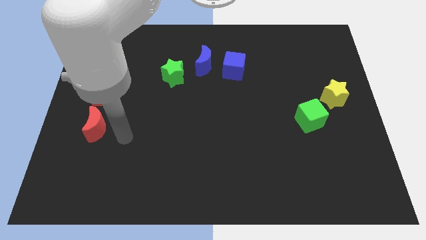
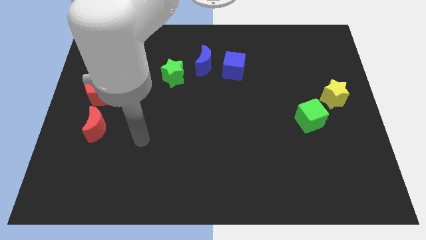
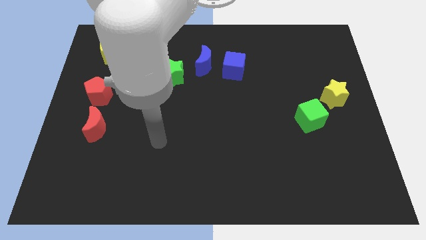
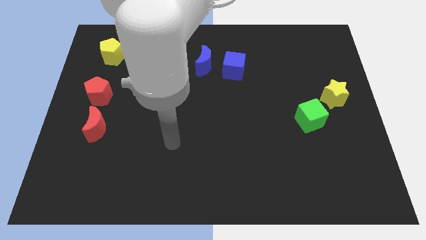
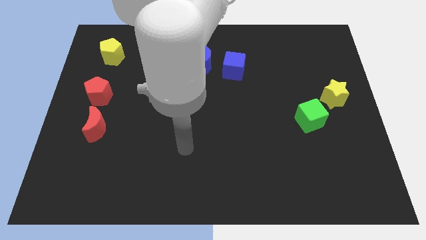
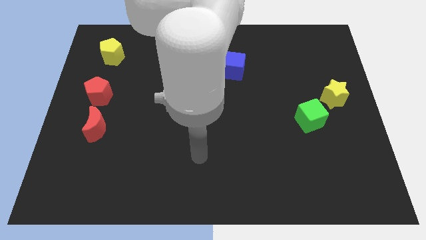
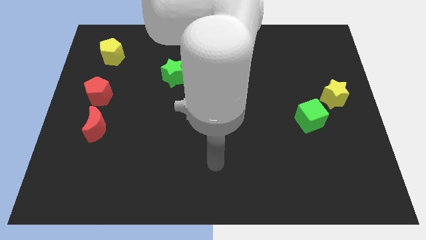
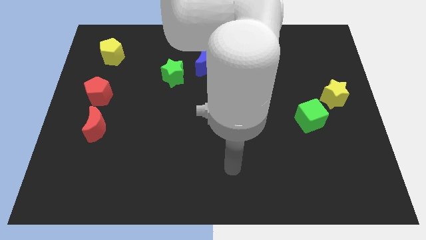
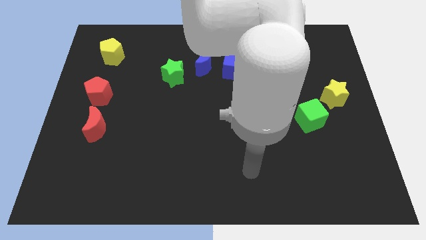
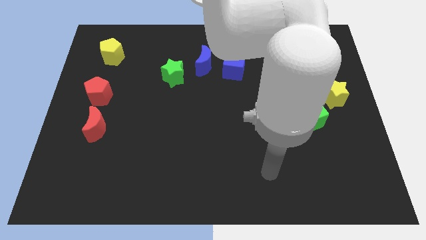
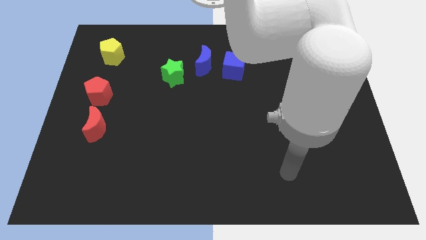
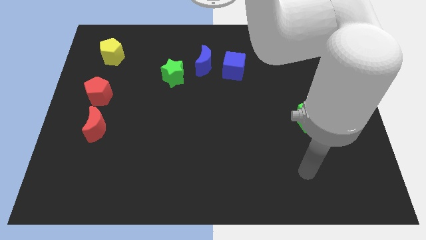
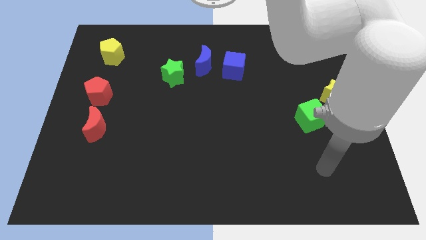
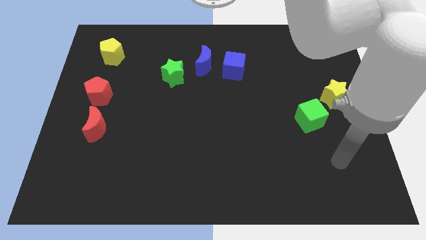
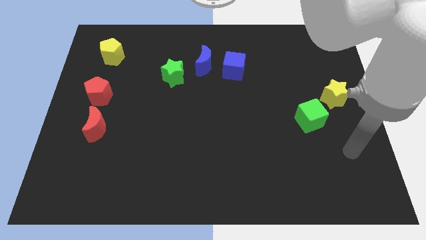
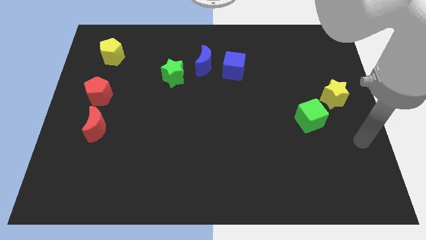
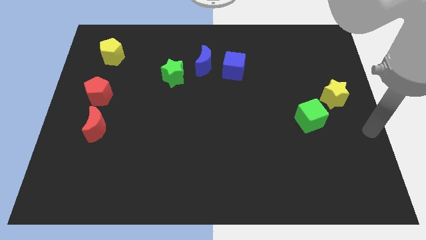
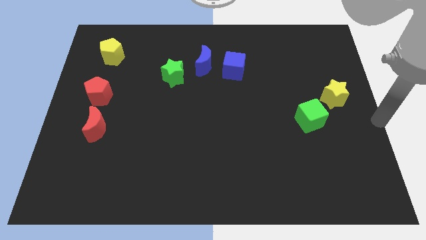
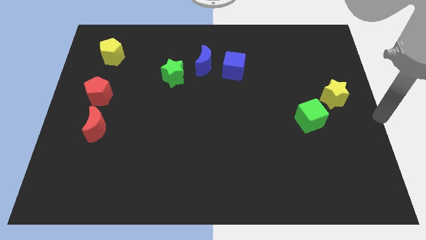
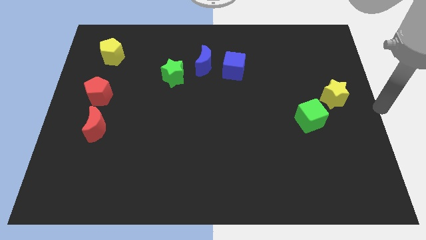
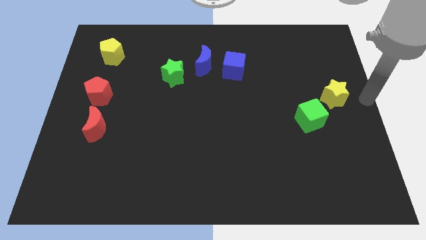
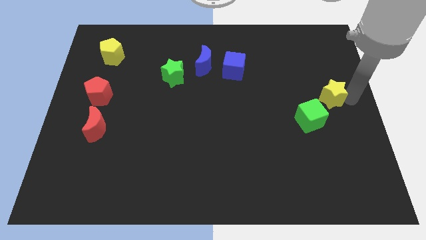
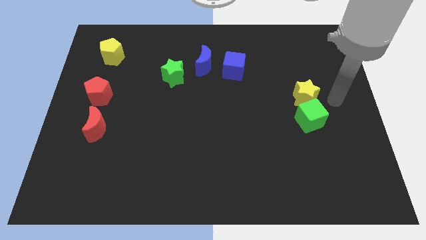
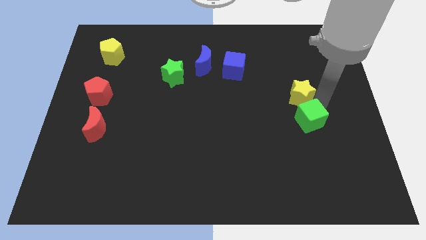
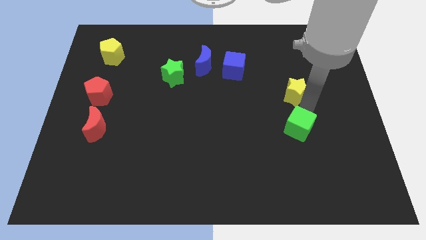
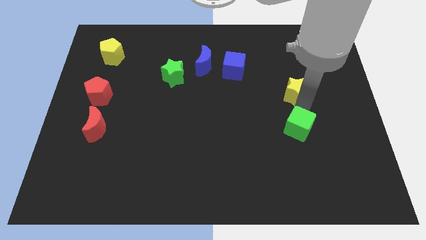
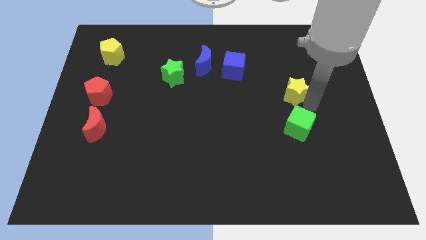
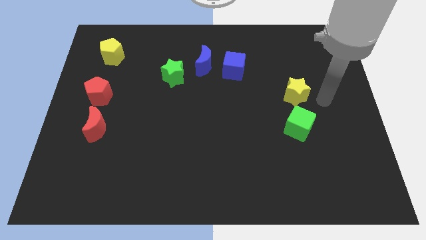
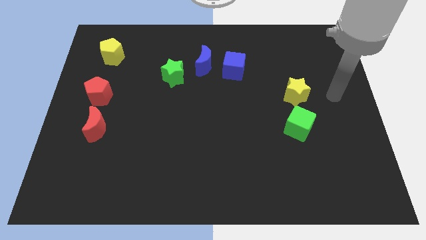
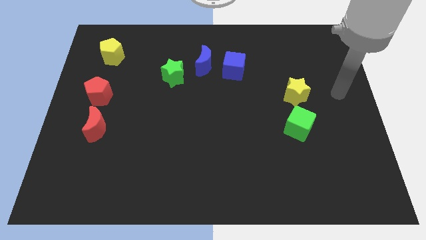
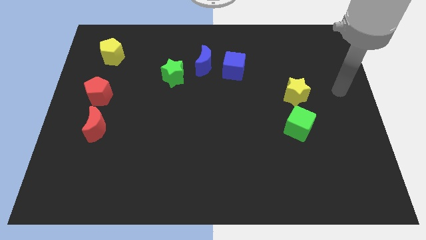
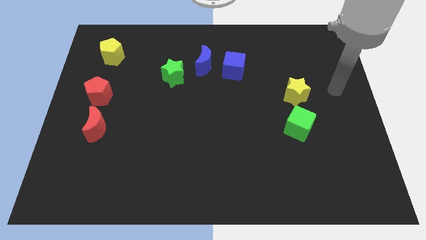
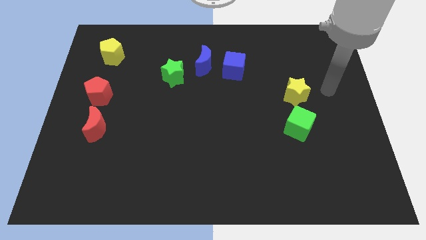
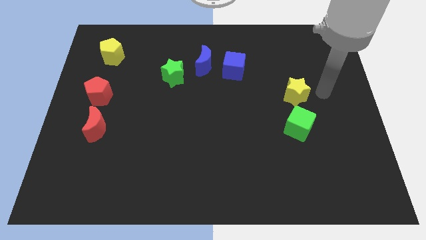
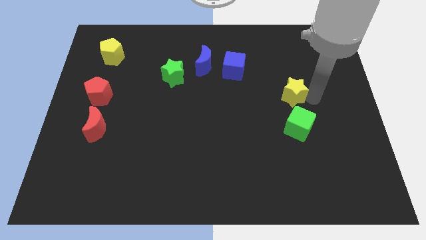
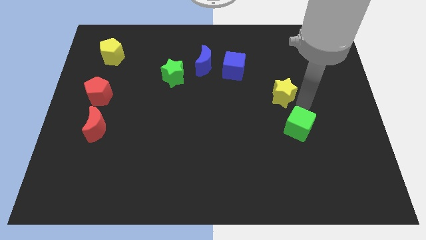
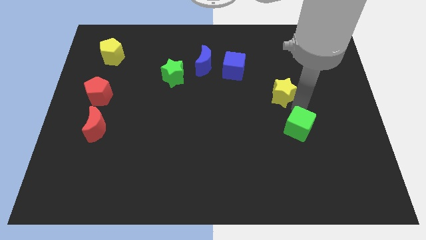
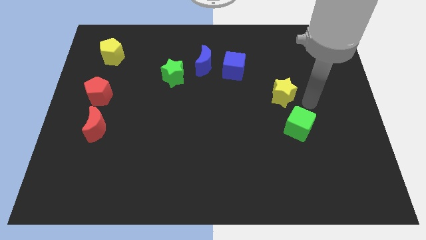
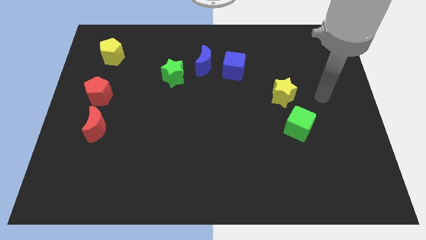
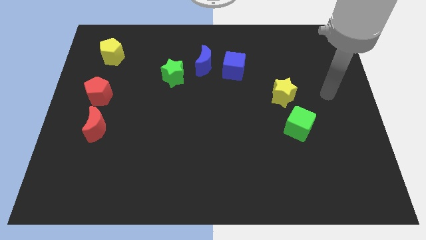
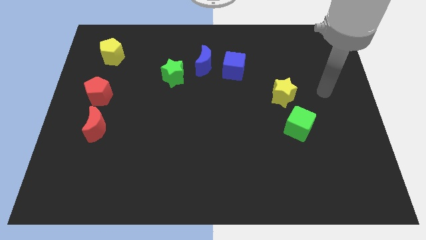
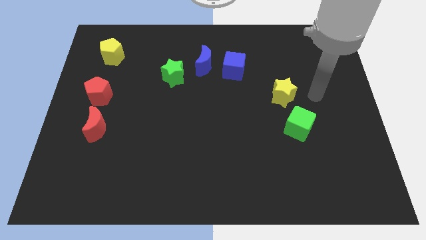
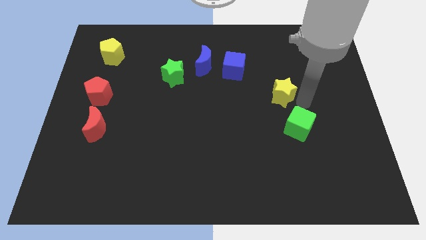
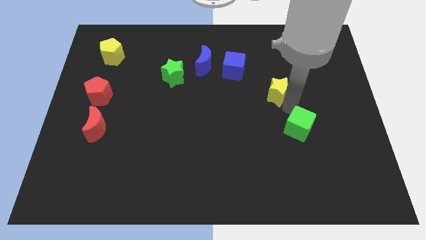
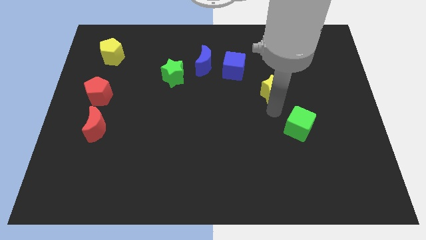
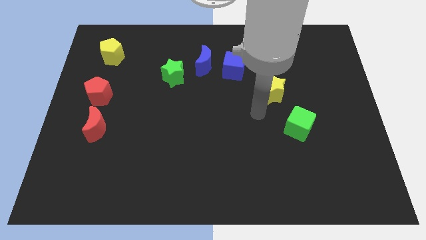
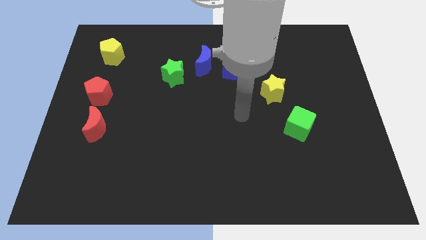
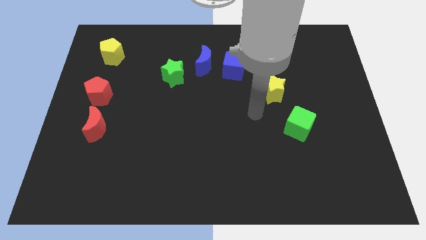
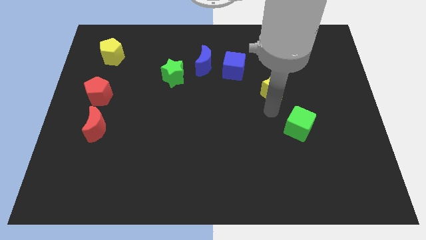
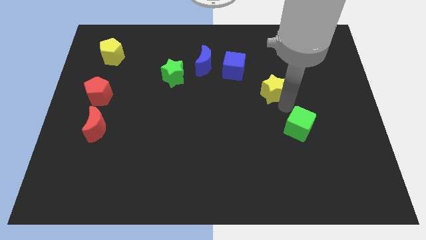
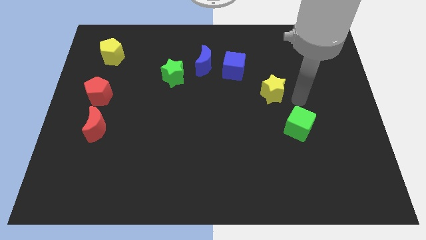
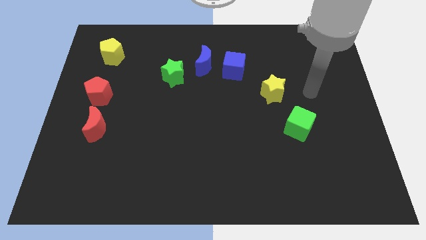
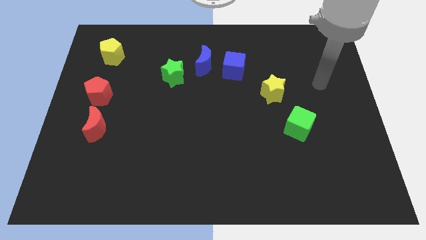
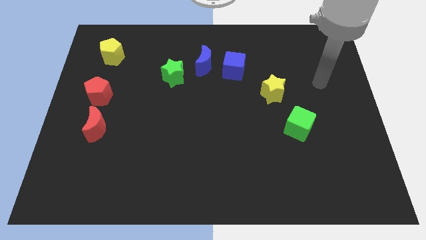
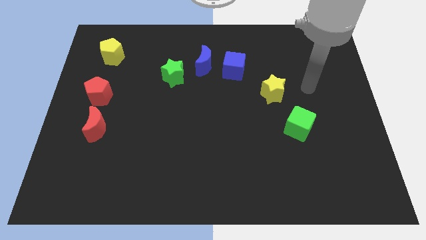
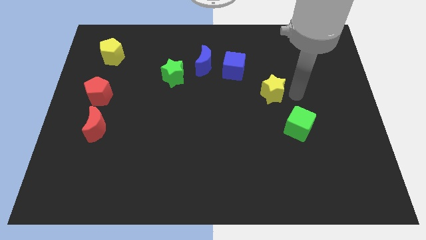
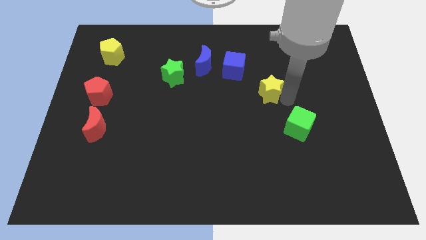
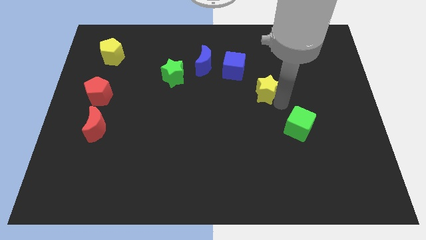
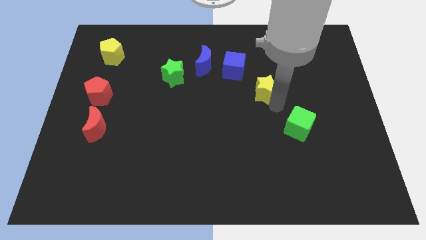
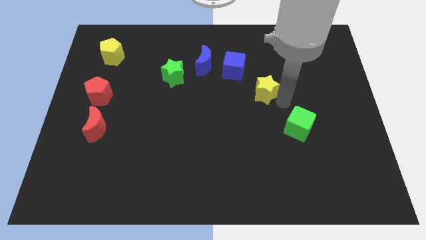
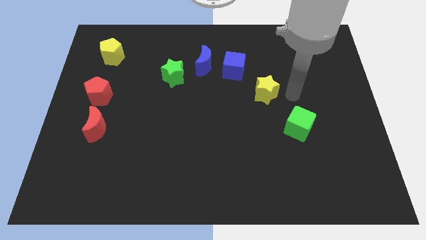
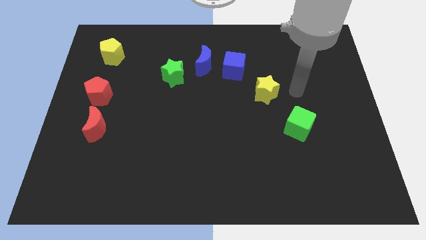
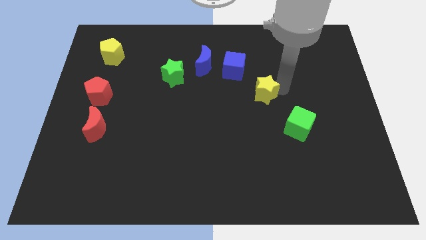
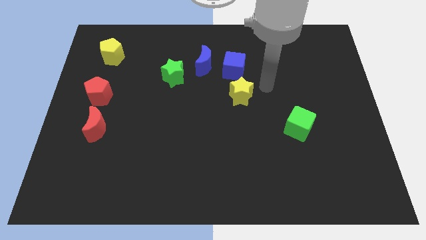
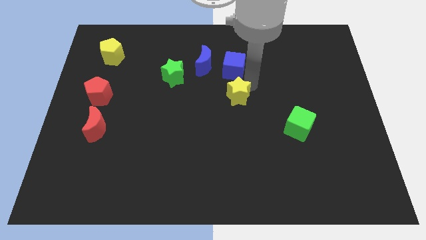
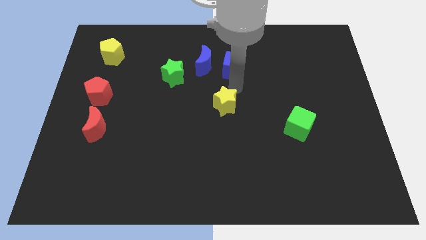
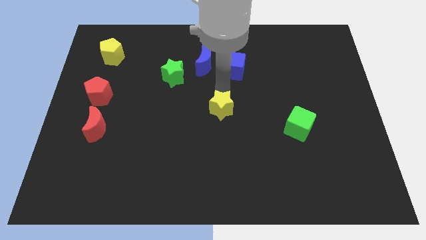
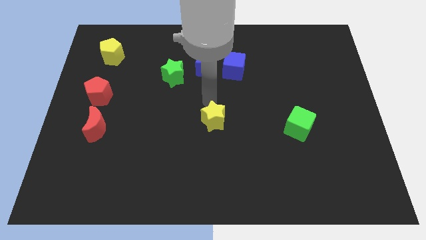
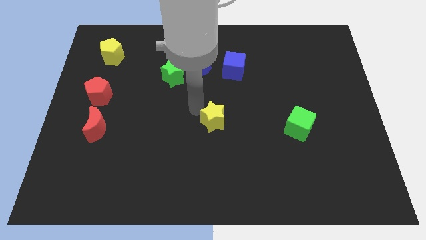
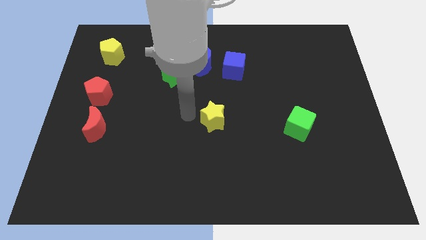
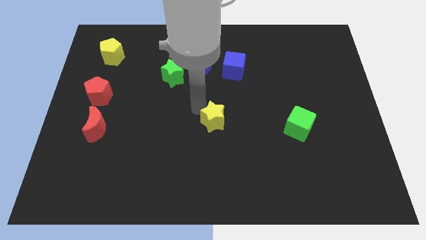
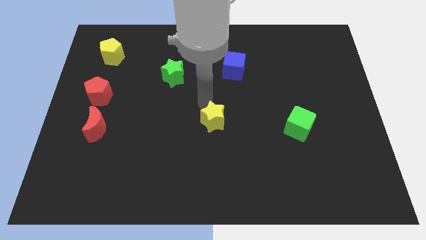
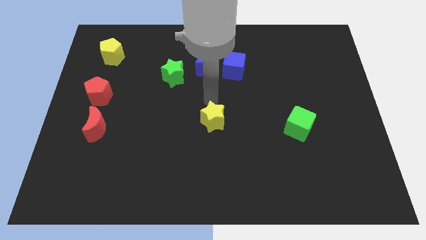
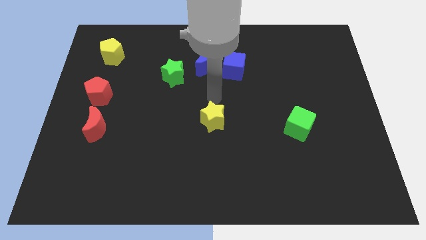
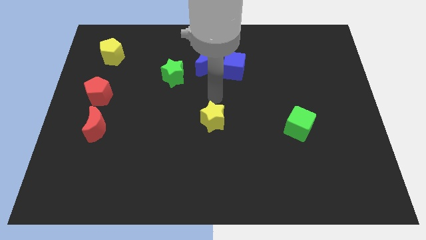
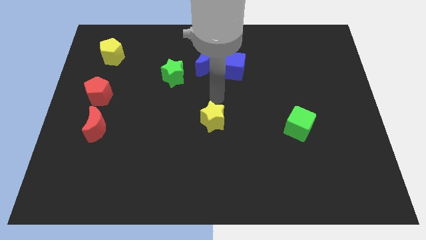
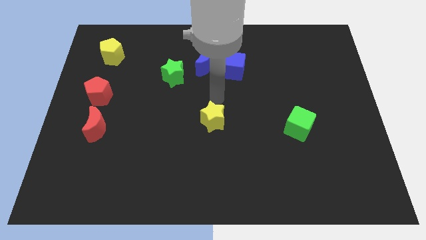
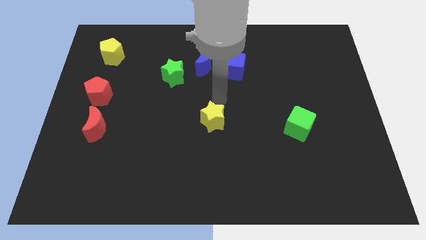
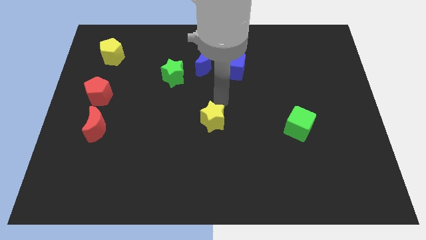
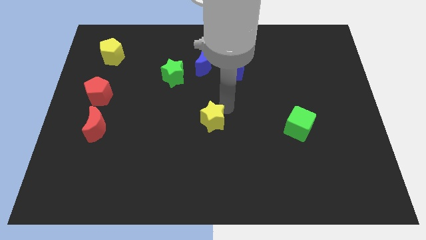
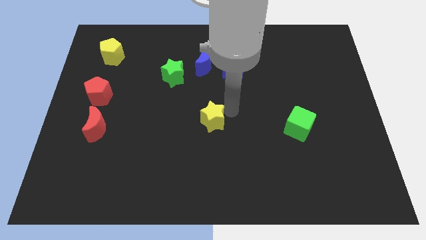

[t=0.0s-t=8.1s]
place the yellow star at the center of the board

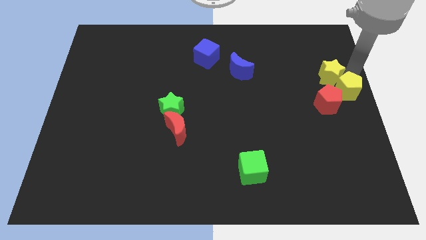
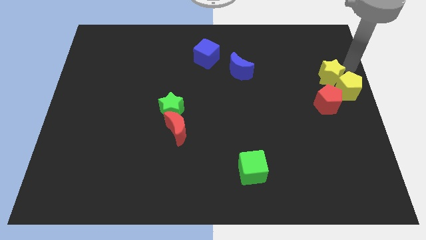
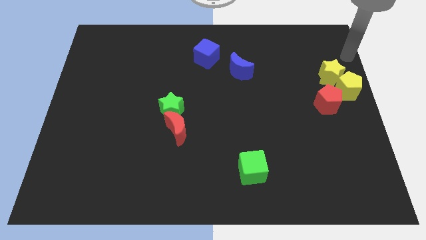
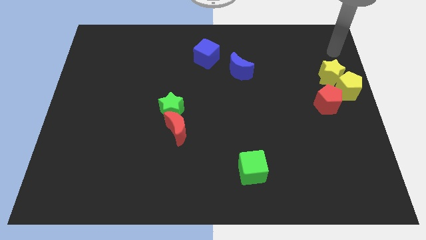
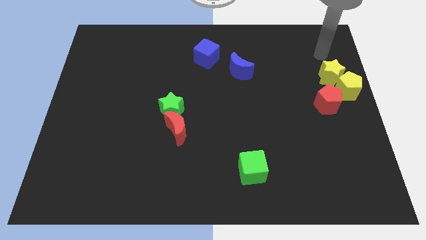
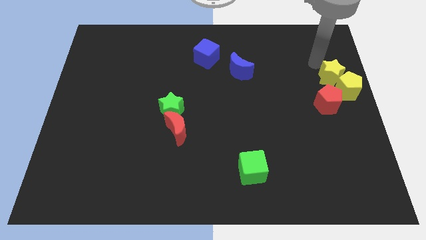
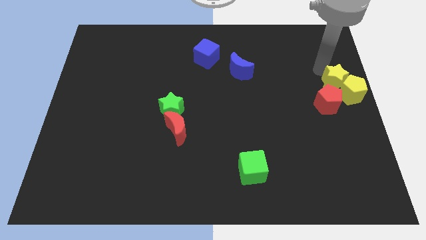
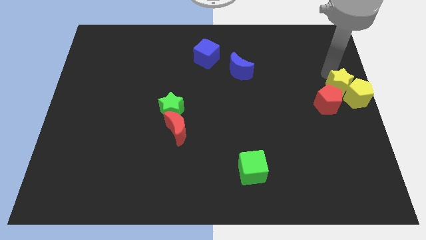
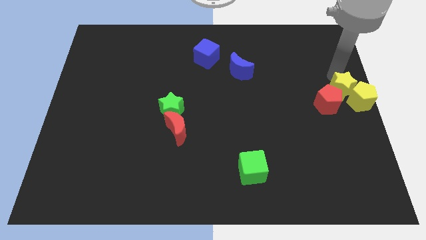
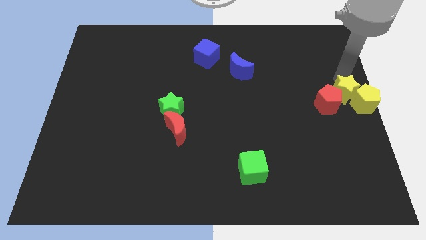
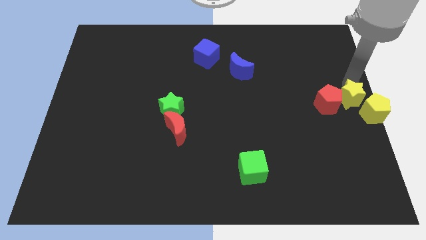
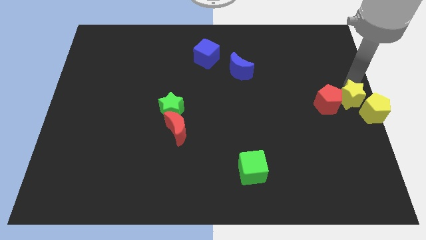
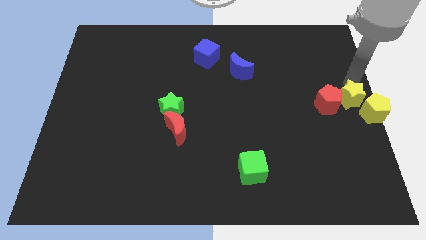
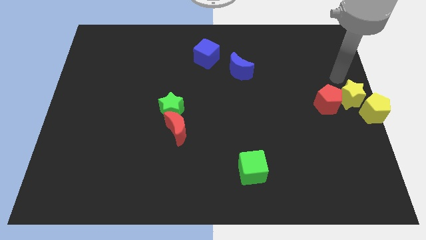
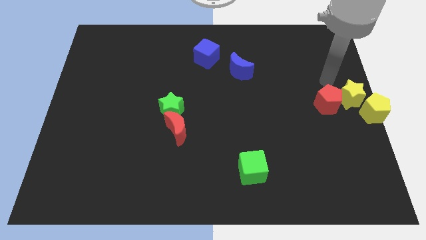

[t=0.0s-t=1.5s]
push the yellow blocks to the right center of the board
